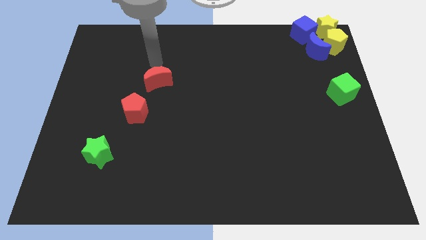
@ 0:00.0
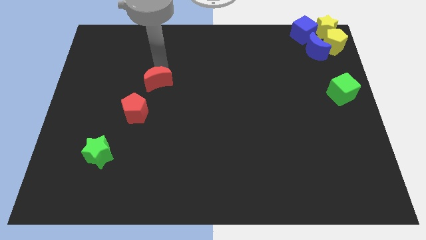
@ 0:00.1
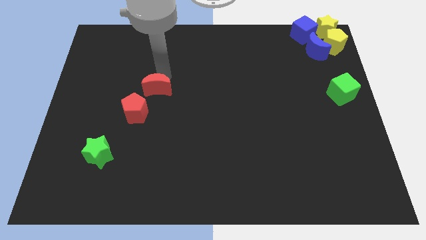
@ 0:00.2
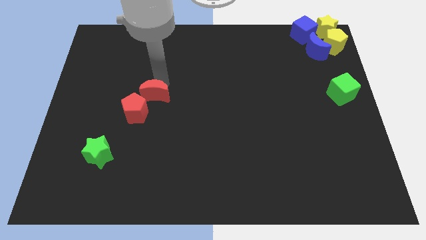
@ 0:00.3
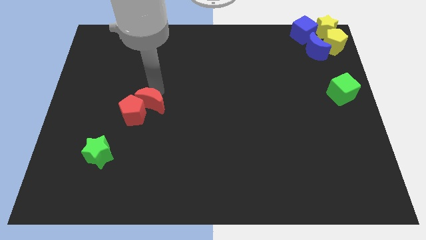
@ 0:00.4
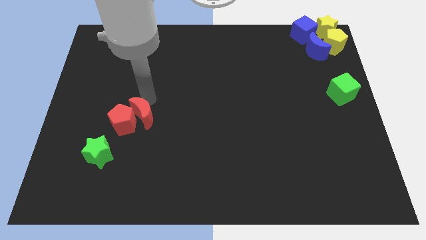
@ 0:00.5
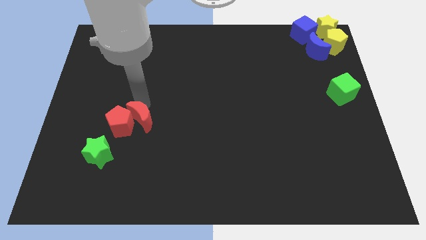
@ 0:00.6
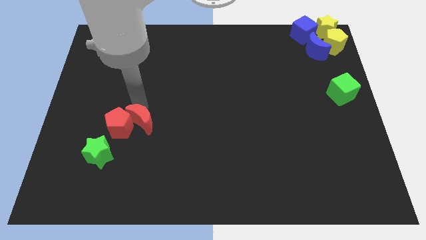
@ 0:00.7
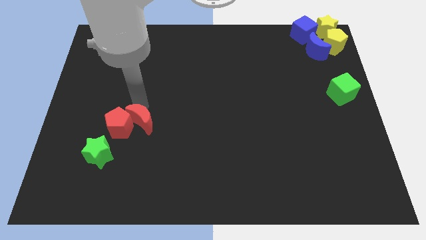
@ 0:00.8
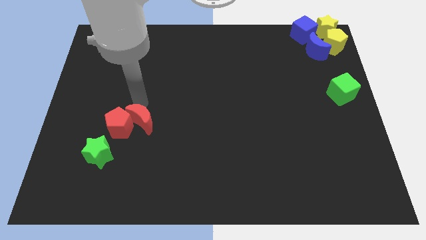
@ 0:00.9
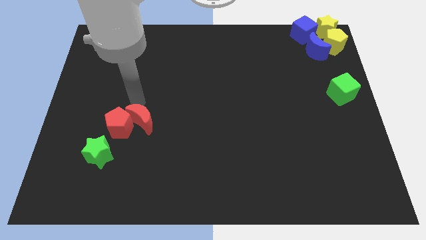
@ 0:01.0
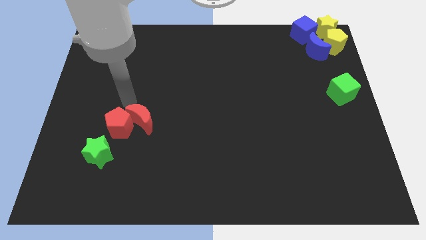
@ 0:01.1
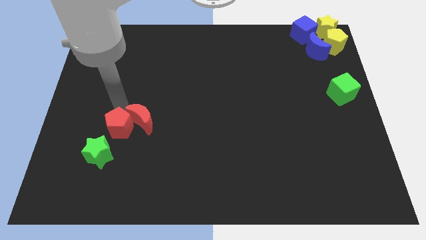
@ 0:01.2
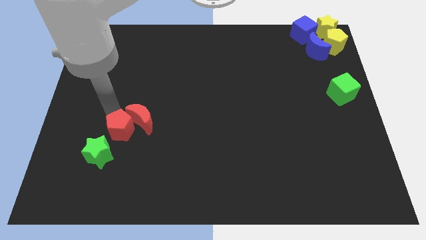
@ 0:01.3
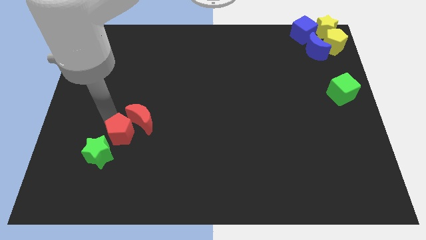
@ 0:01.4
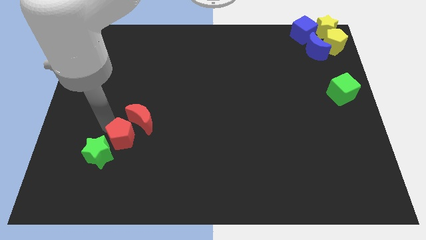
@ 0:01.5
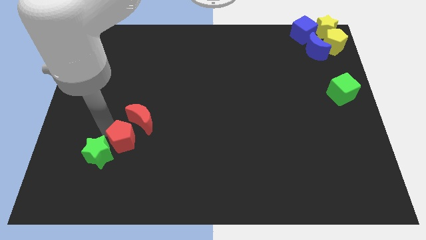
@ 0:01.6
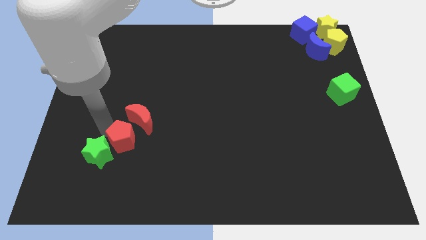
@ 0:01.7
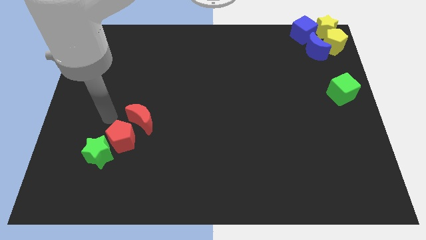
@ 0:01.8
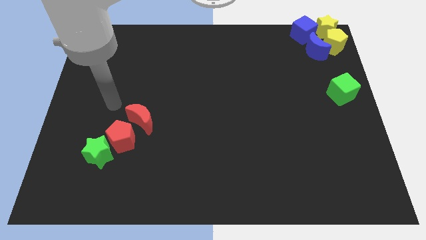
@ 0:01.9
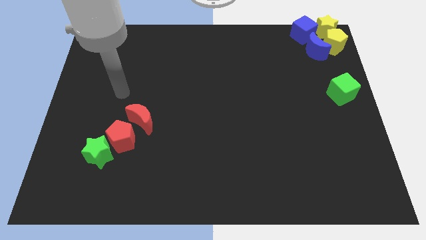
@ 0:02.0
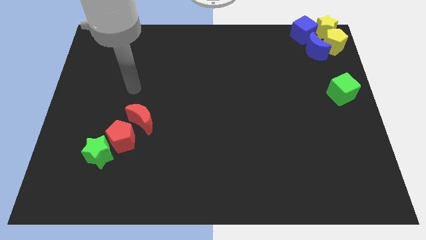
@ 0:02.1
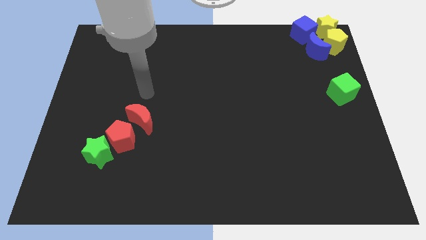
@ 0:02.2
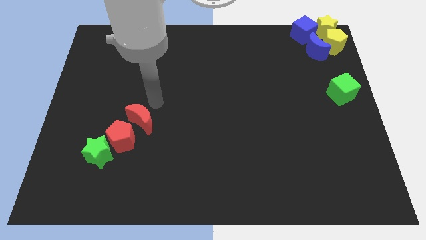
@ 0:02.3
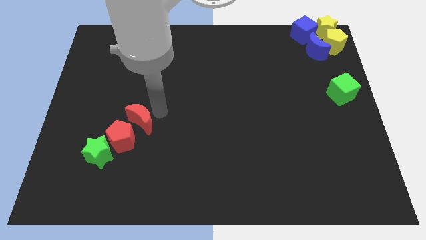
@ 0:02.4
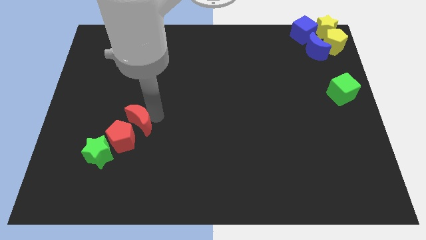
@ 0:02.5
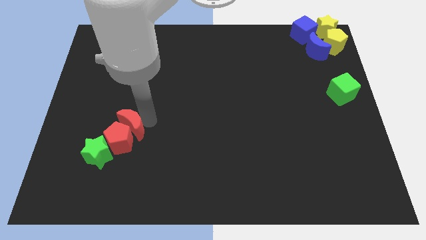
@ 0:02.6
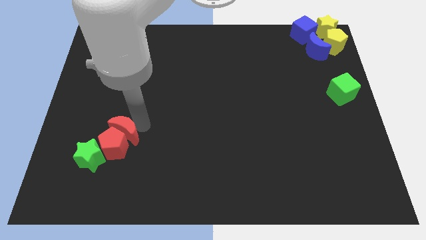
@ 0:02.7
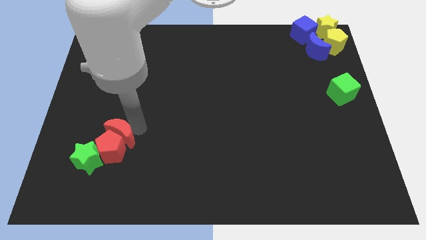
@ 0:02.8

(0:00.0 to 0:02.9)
push the red crescent towards the red pentagon

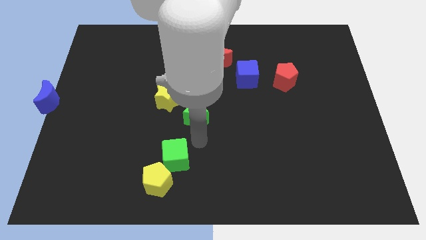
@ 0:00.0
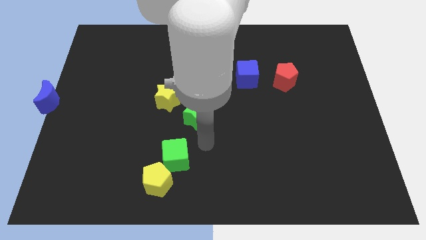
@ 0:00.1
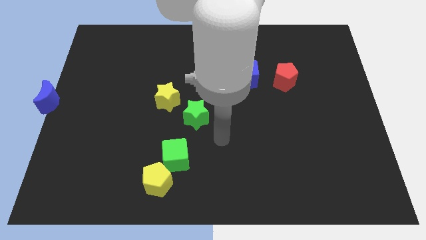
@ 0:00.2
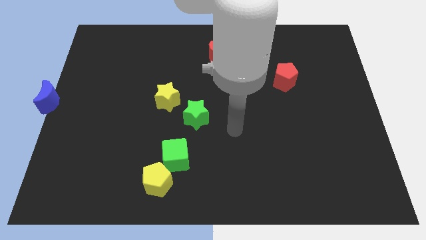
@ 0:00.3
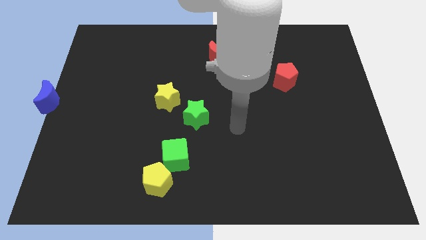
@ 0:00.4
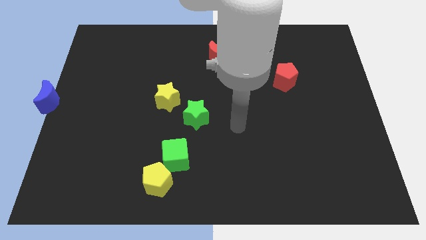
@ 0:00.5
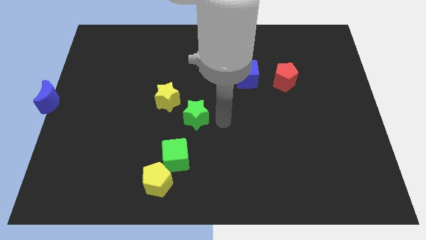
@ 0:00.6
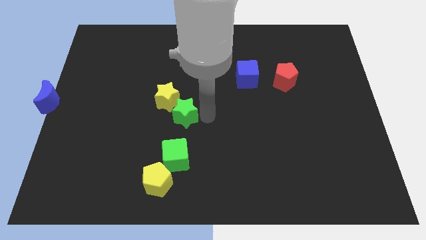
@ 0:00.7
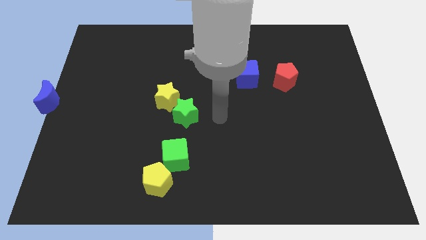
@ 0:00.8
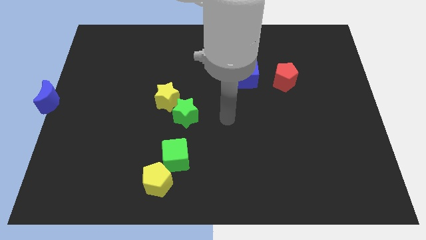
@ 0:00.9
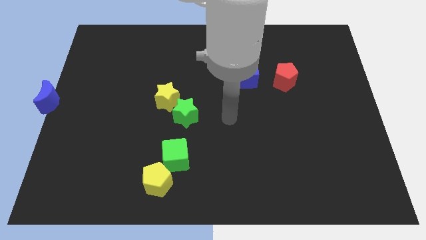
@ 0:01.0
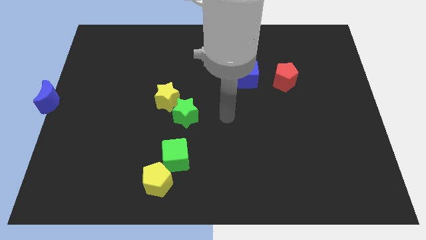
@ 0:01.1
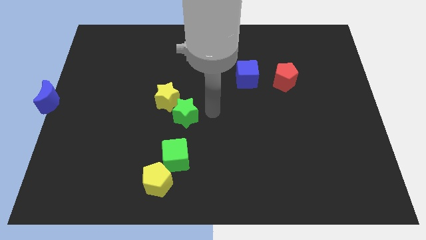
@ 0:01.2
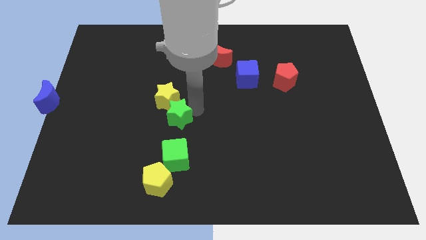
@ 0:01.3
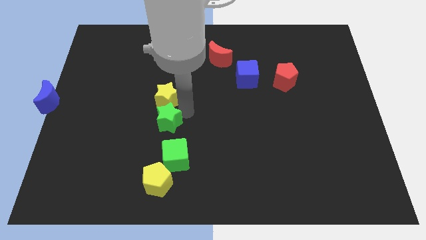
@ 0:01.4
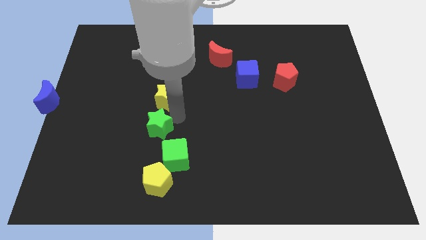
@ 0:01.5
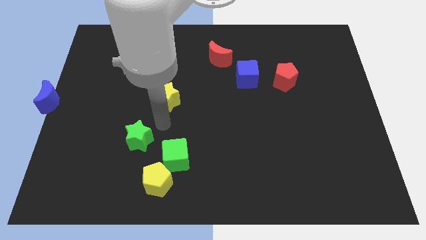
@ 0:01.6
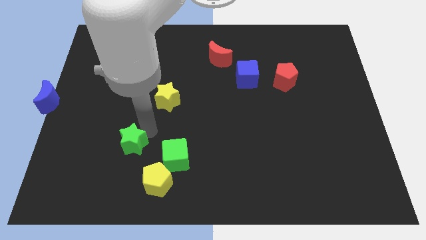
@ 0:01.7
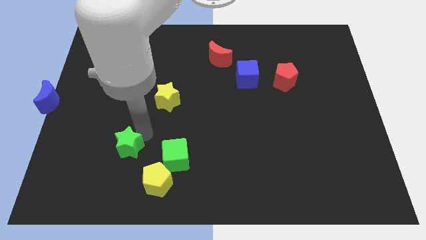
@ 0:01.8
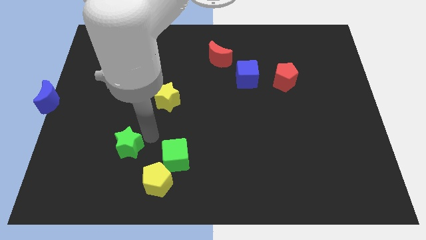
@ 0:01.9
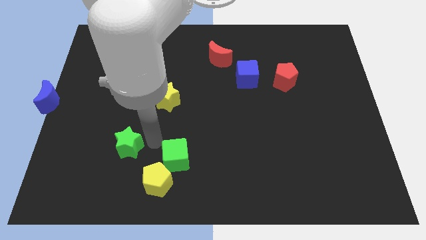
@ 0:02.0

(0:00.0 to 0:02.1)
place your arm in between green blocks

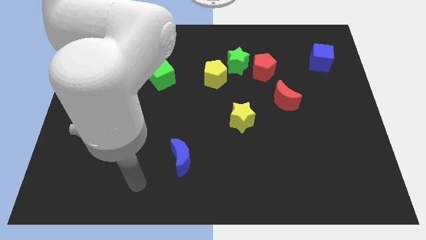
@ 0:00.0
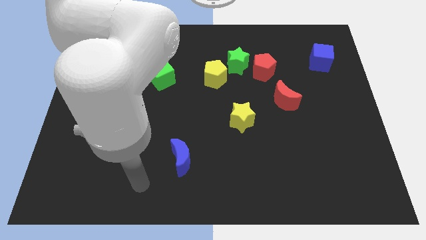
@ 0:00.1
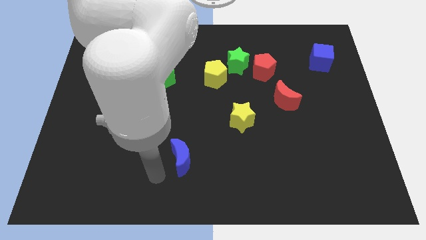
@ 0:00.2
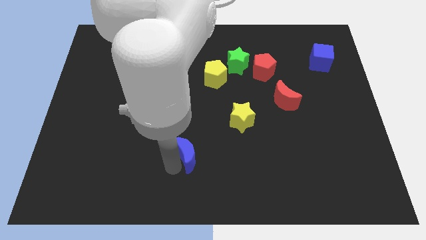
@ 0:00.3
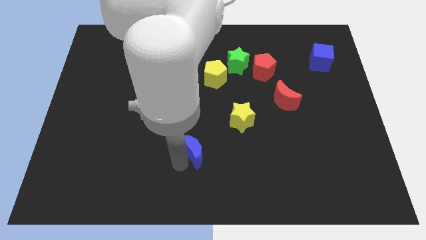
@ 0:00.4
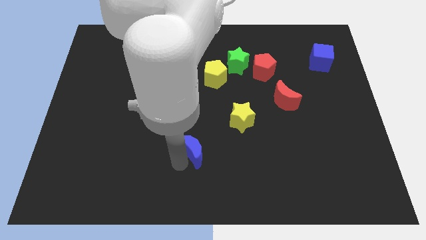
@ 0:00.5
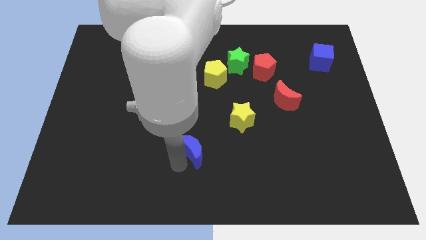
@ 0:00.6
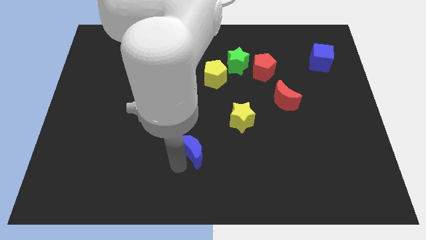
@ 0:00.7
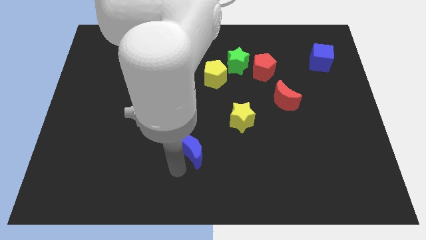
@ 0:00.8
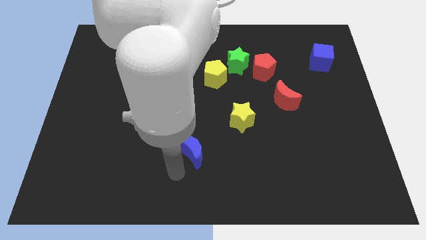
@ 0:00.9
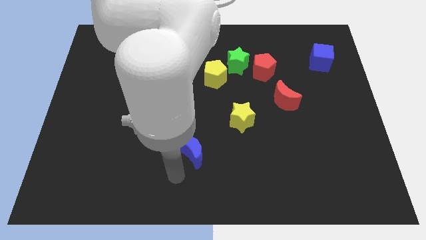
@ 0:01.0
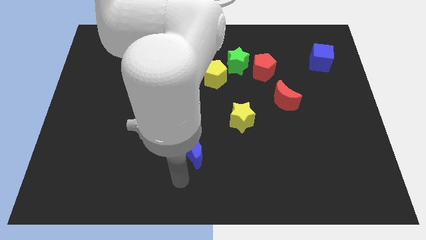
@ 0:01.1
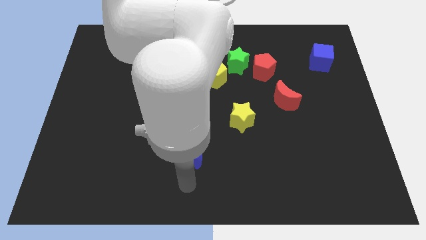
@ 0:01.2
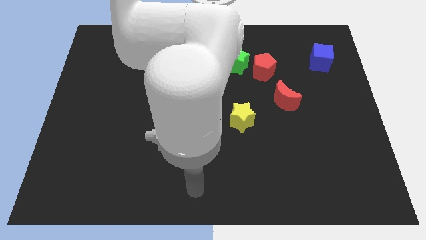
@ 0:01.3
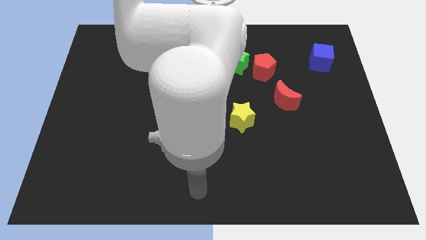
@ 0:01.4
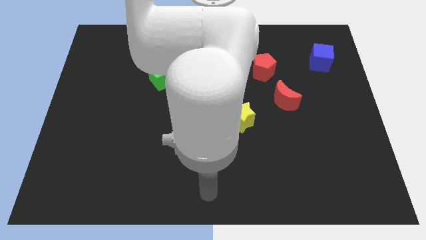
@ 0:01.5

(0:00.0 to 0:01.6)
move your arm to the bottom side of the blue moon

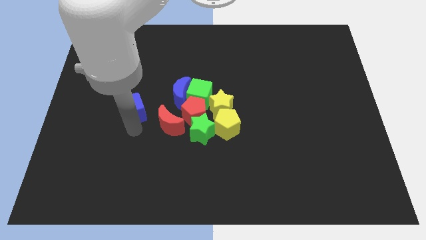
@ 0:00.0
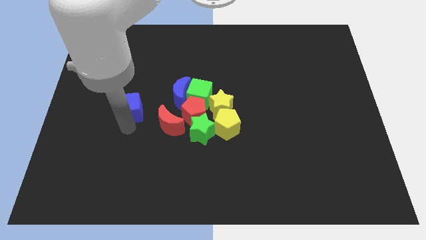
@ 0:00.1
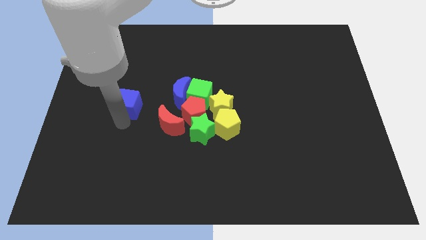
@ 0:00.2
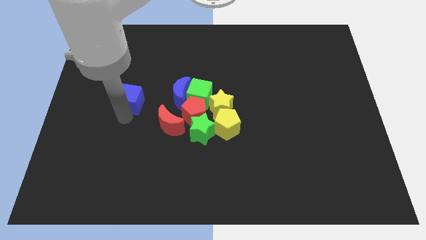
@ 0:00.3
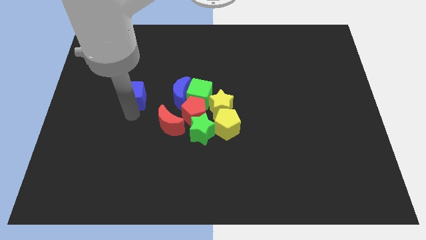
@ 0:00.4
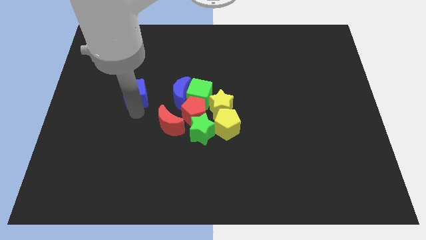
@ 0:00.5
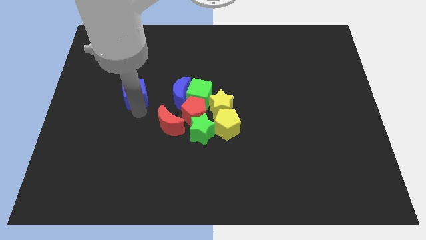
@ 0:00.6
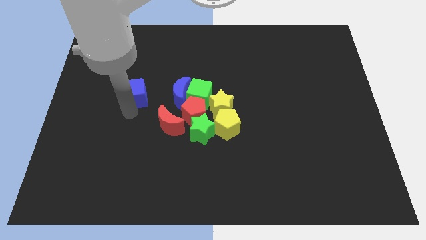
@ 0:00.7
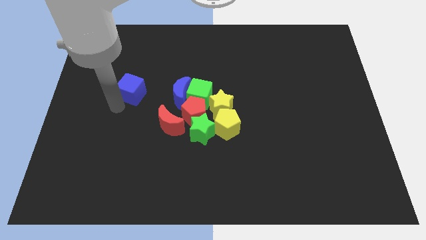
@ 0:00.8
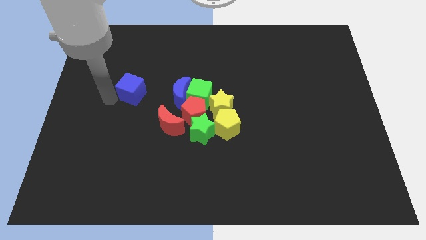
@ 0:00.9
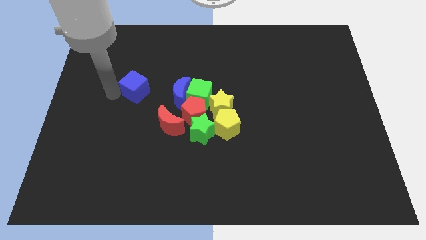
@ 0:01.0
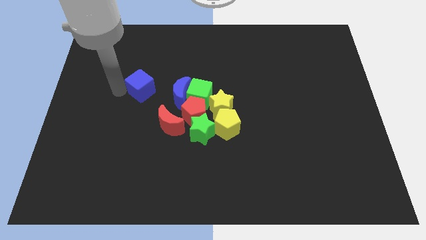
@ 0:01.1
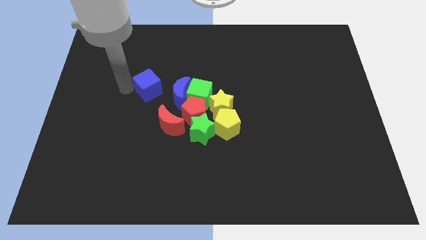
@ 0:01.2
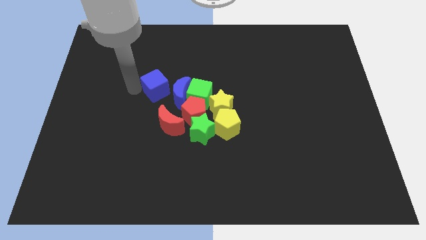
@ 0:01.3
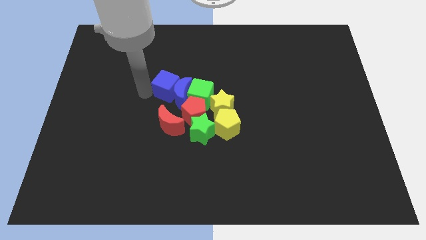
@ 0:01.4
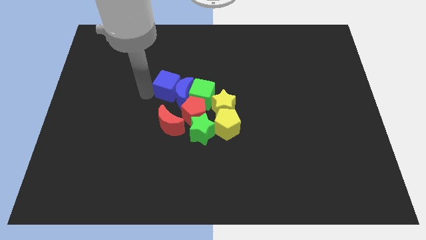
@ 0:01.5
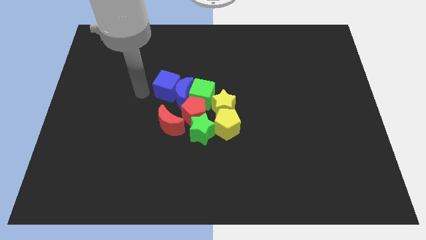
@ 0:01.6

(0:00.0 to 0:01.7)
push the blue cube into blue crescent

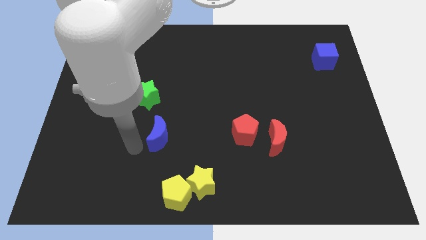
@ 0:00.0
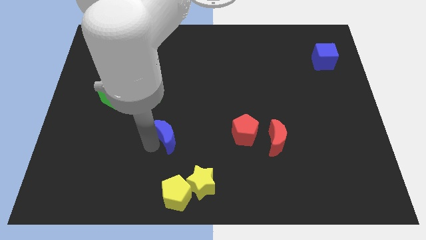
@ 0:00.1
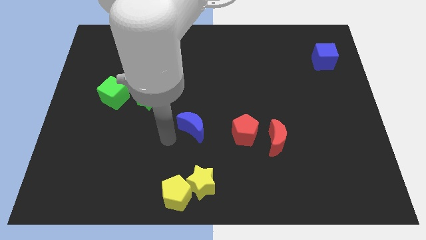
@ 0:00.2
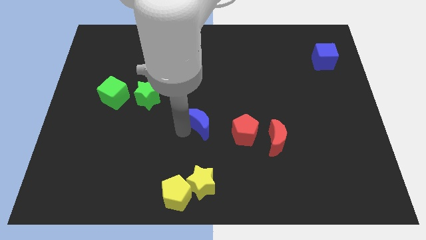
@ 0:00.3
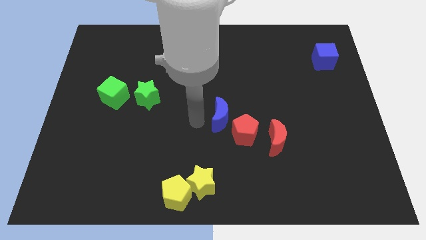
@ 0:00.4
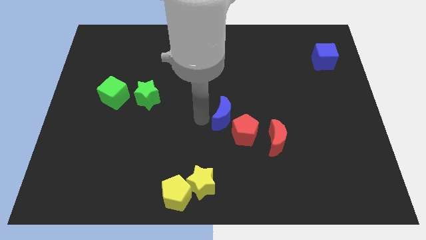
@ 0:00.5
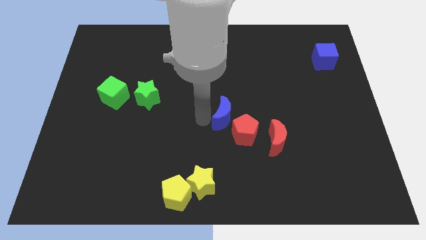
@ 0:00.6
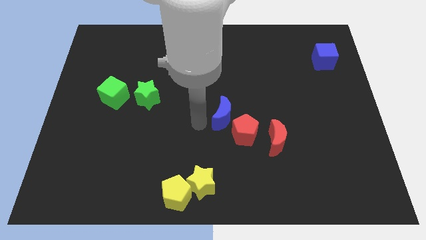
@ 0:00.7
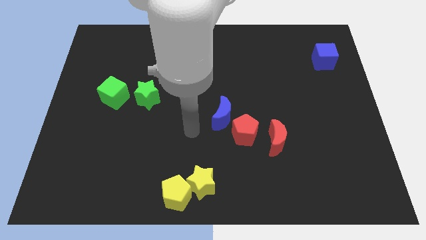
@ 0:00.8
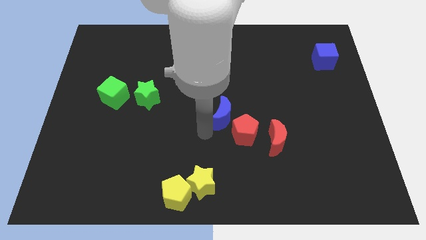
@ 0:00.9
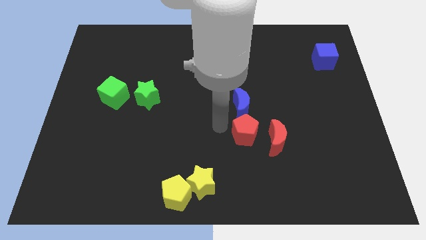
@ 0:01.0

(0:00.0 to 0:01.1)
place the blue crescent at the top of the red pentagon
